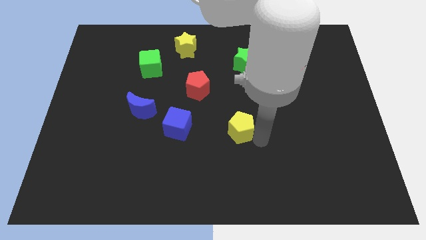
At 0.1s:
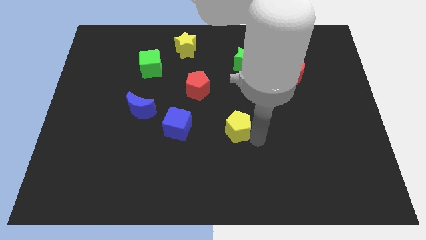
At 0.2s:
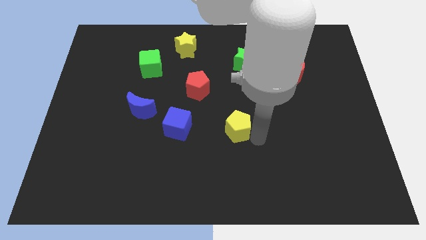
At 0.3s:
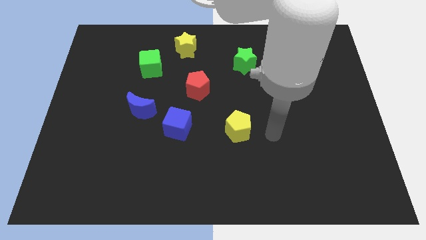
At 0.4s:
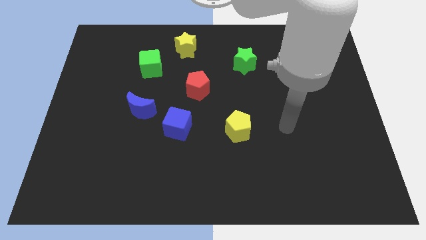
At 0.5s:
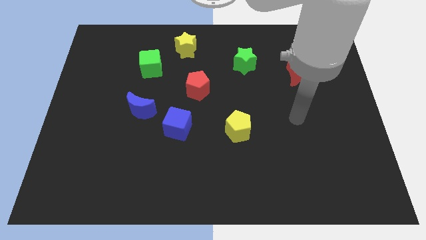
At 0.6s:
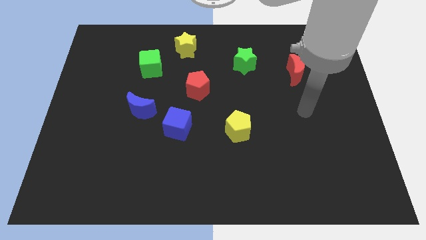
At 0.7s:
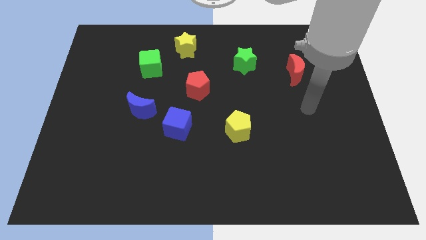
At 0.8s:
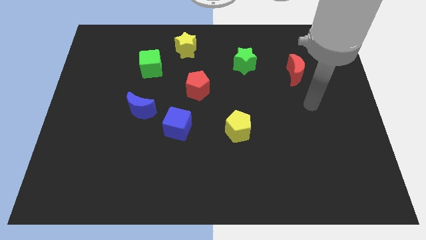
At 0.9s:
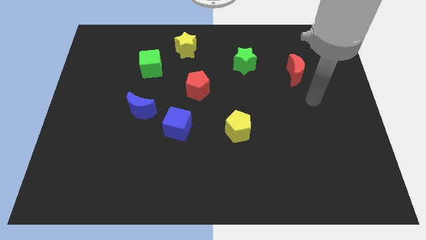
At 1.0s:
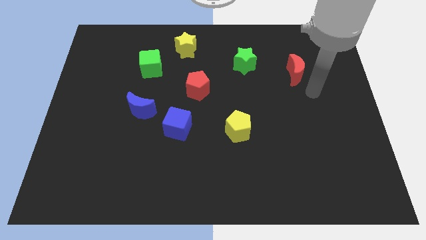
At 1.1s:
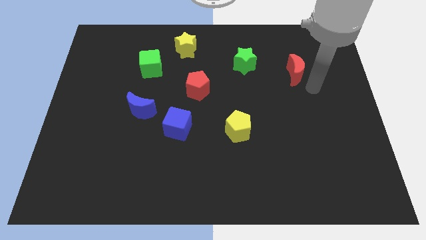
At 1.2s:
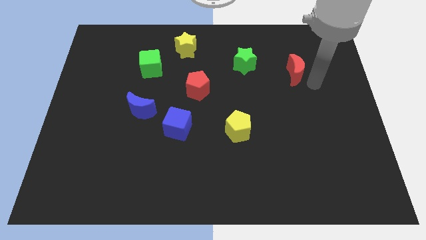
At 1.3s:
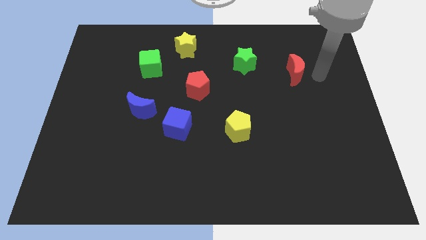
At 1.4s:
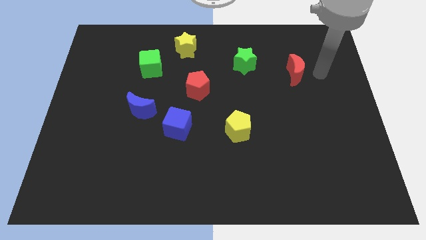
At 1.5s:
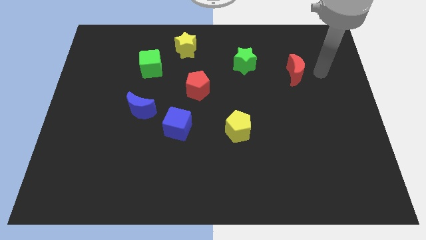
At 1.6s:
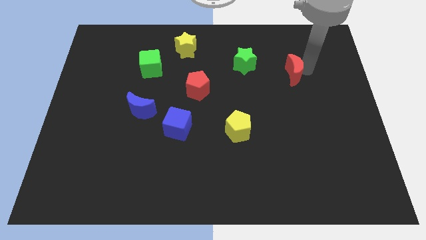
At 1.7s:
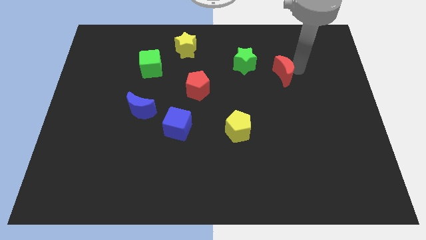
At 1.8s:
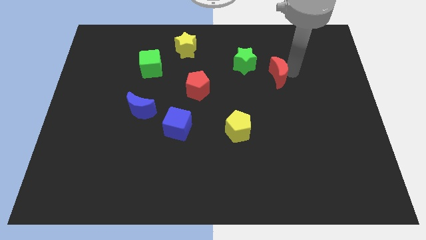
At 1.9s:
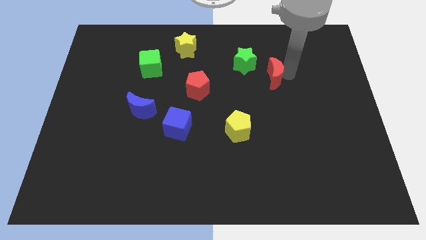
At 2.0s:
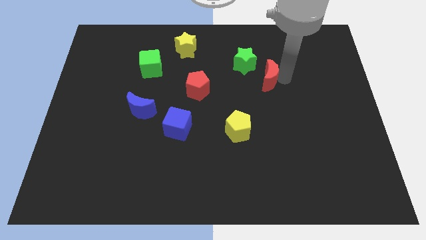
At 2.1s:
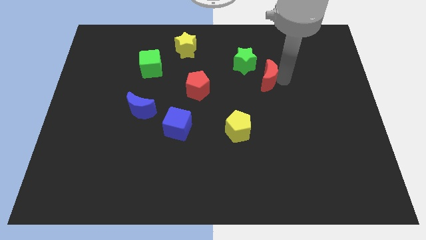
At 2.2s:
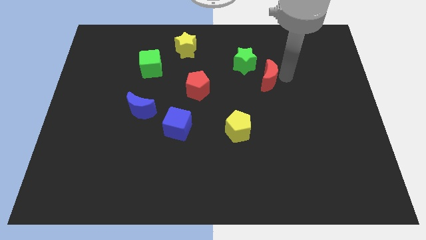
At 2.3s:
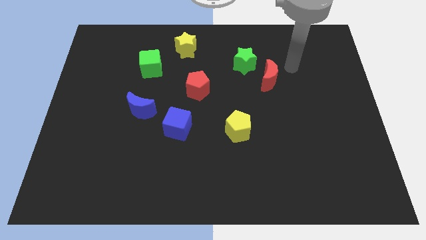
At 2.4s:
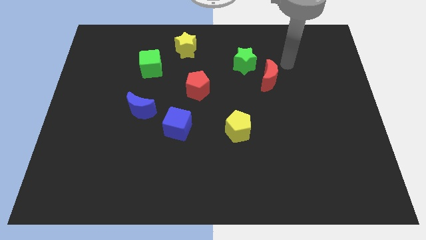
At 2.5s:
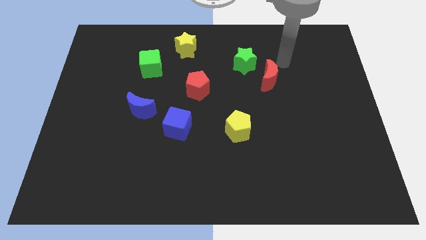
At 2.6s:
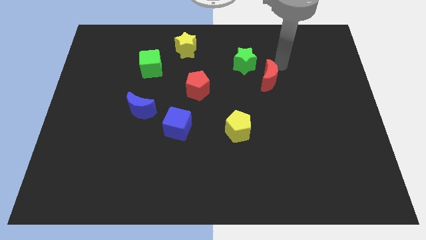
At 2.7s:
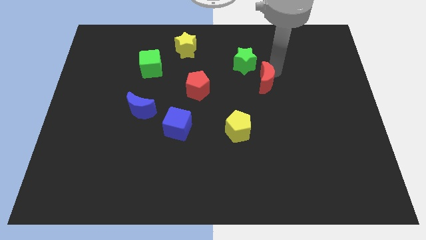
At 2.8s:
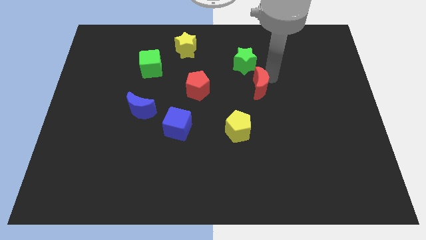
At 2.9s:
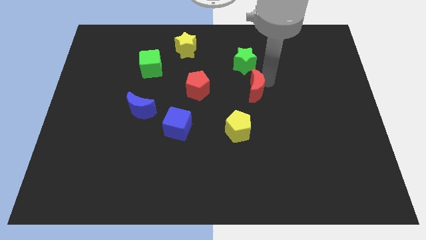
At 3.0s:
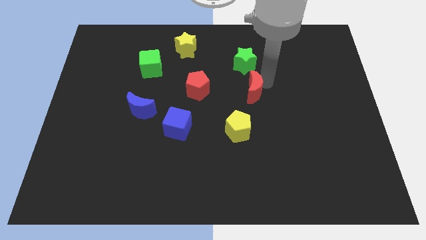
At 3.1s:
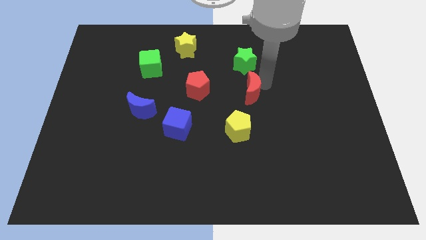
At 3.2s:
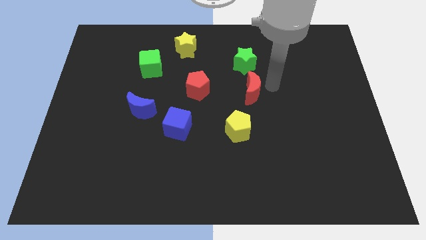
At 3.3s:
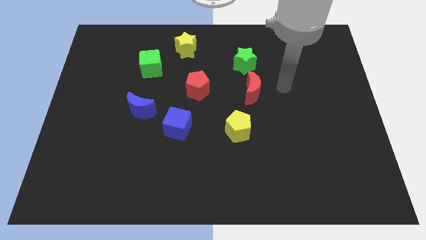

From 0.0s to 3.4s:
push the red crescent to the bottom of the green star

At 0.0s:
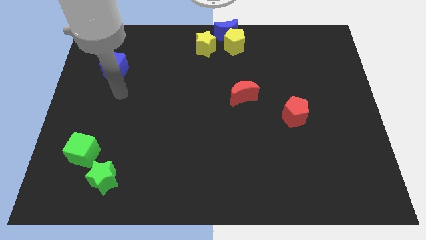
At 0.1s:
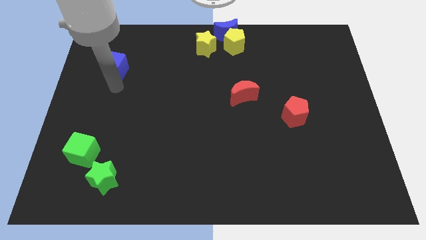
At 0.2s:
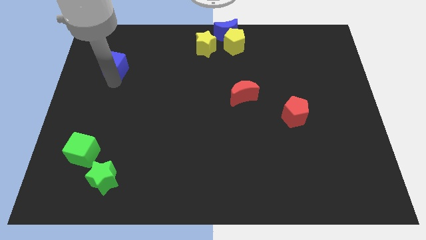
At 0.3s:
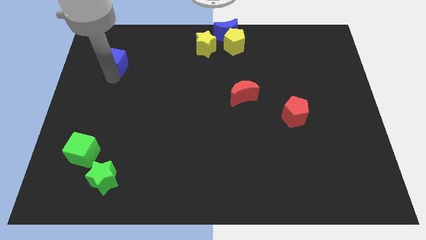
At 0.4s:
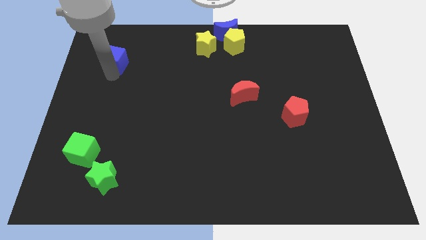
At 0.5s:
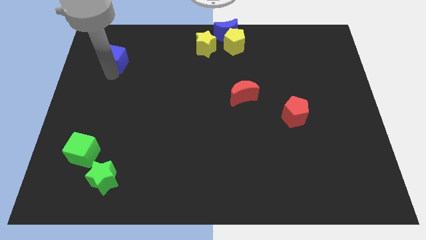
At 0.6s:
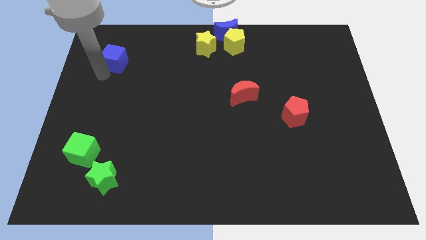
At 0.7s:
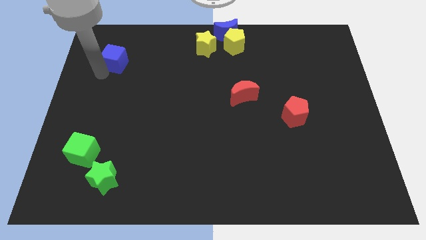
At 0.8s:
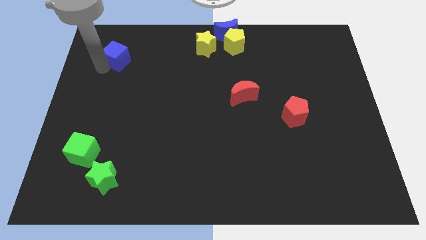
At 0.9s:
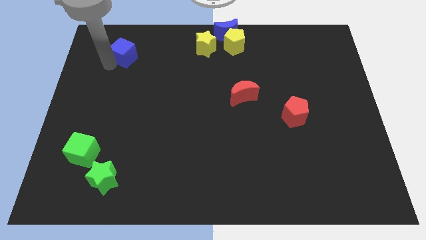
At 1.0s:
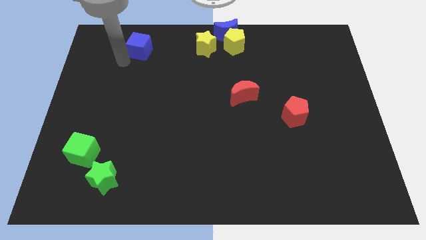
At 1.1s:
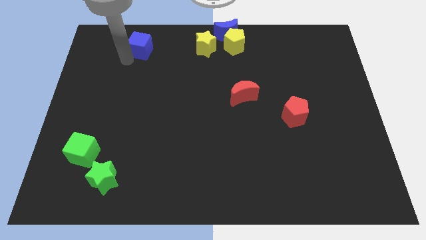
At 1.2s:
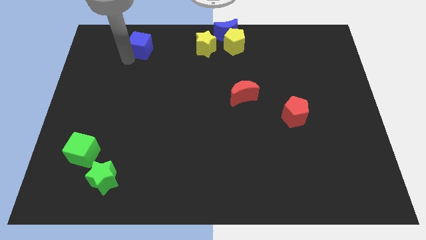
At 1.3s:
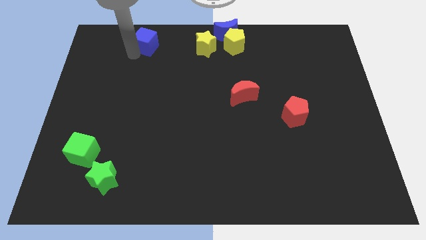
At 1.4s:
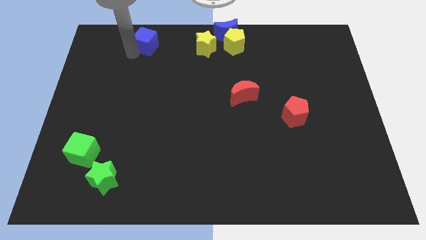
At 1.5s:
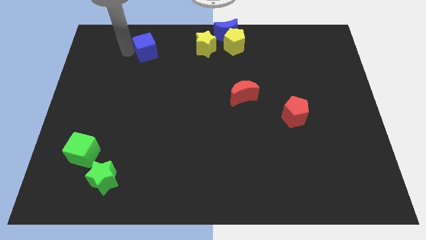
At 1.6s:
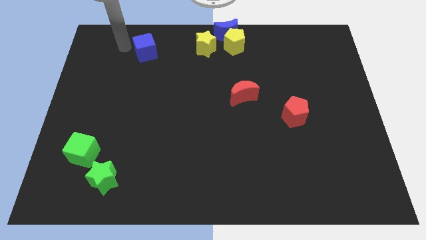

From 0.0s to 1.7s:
place the blue cube parallel to the left of yellow star

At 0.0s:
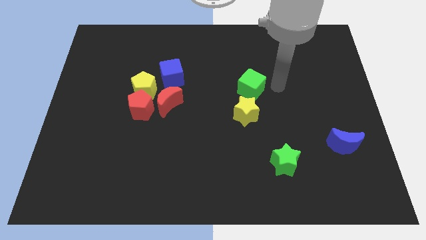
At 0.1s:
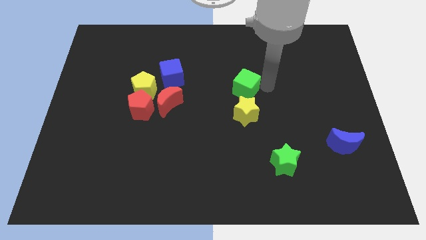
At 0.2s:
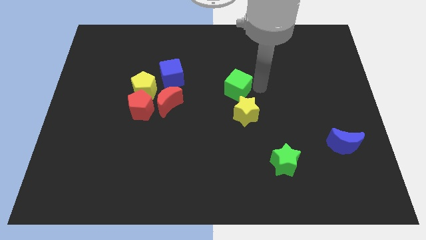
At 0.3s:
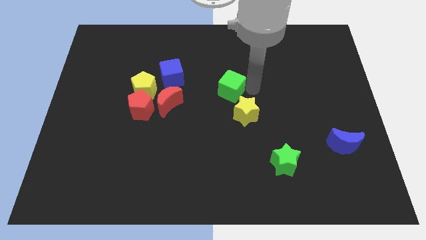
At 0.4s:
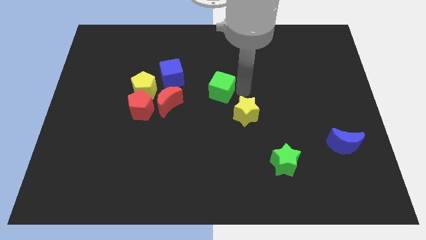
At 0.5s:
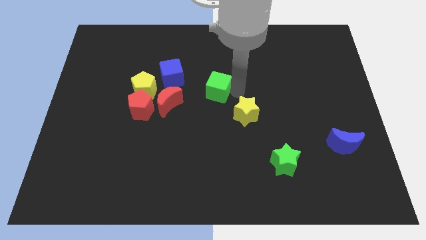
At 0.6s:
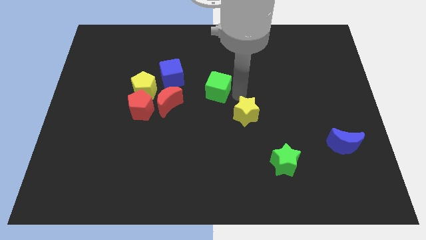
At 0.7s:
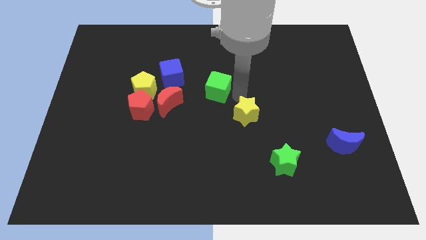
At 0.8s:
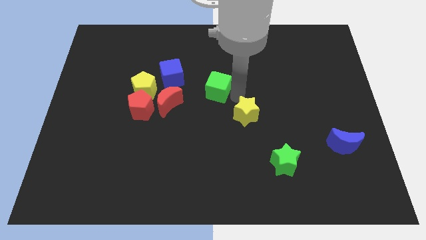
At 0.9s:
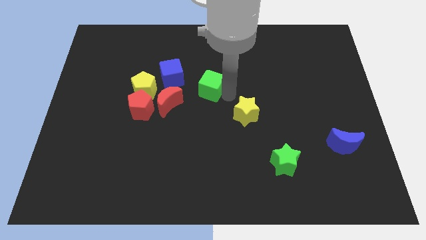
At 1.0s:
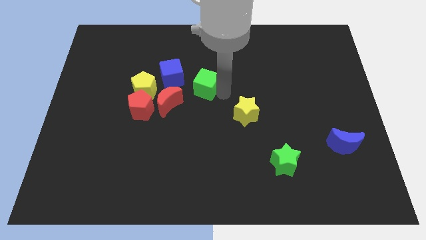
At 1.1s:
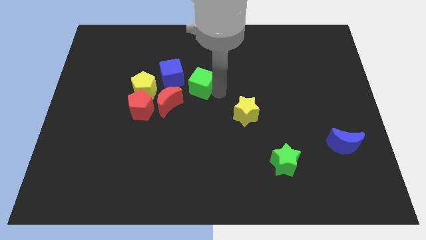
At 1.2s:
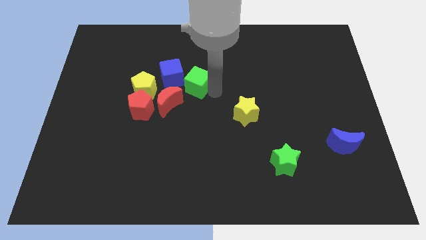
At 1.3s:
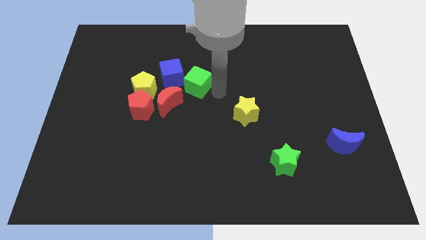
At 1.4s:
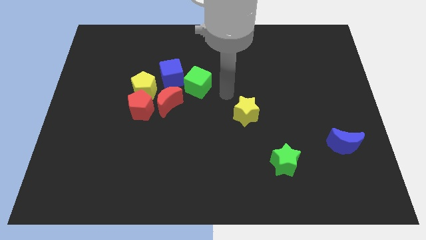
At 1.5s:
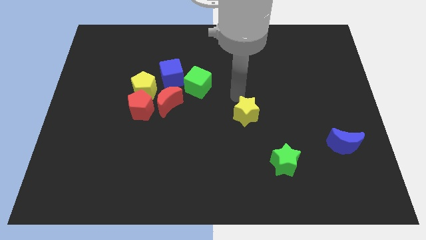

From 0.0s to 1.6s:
push the green cube close to the blue cube

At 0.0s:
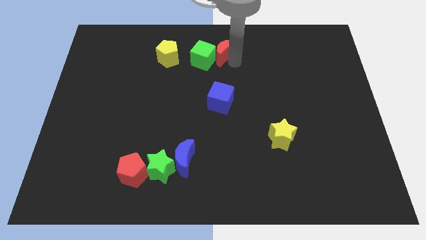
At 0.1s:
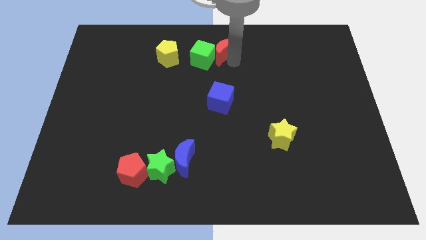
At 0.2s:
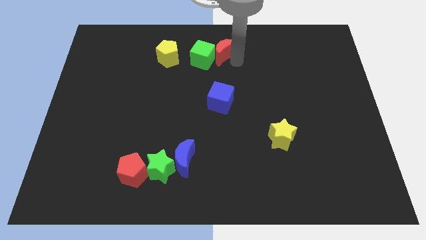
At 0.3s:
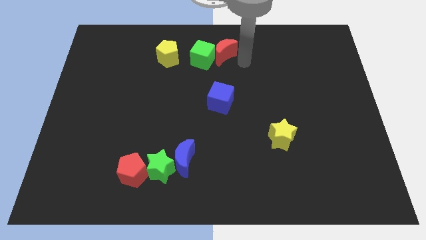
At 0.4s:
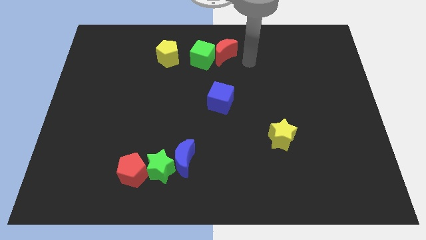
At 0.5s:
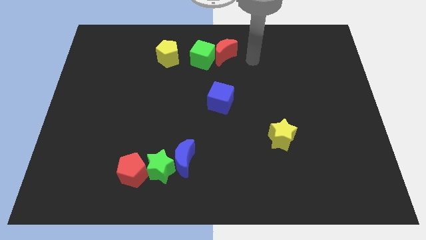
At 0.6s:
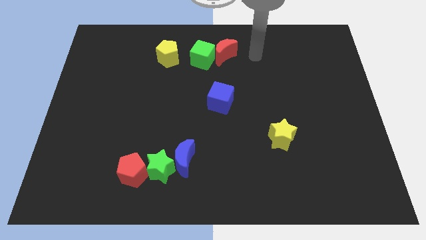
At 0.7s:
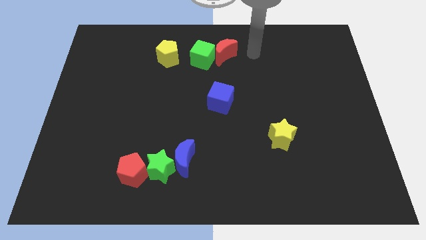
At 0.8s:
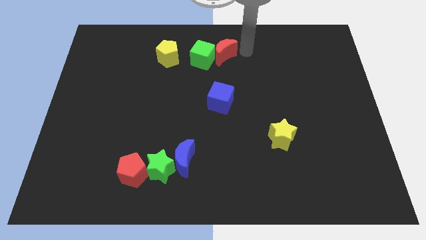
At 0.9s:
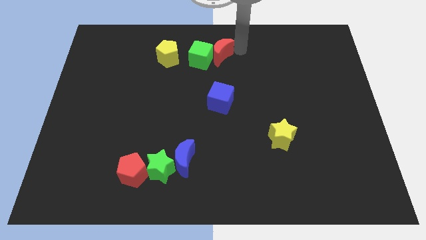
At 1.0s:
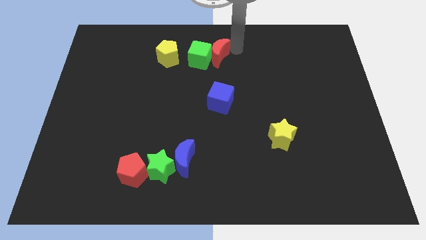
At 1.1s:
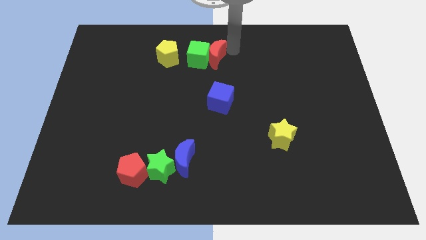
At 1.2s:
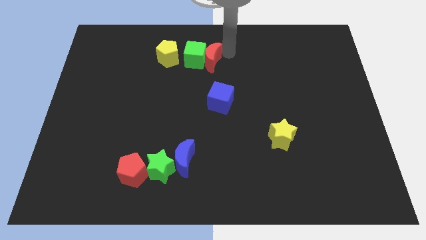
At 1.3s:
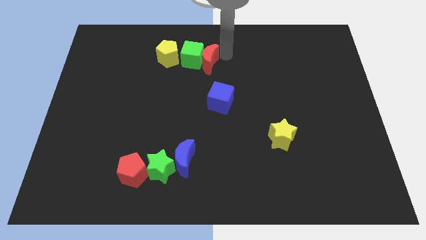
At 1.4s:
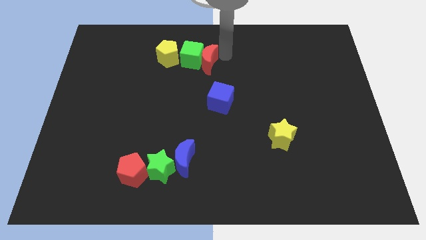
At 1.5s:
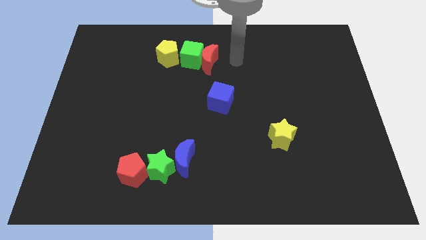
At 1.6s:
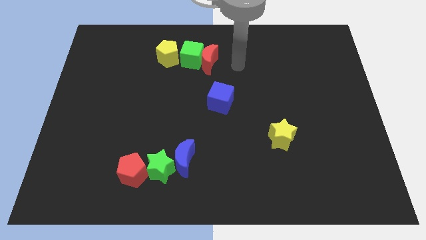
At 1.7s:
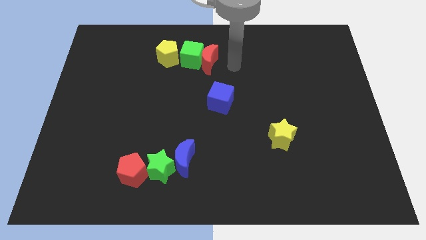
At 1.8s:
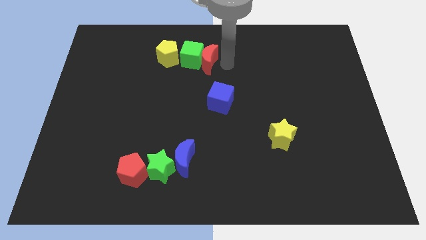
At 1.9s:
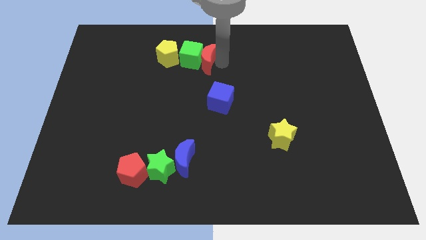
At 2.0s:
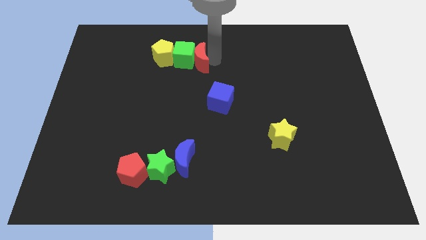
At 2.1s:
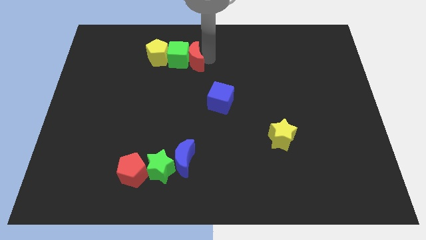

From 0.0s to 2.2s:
push red moon along with other blocks towards left side

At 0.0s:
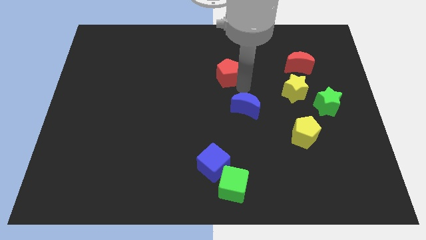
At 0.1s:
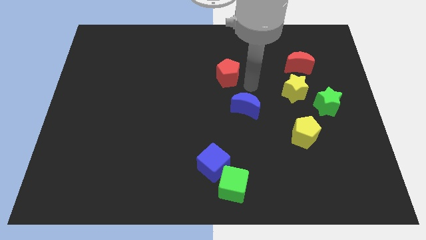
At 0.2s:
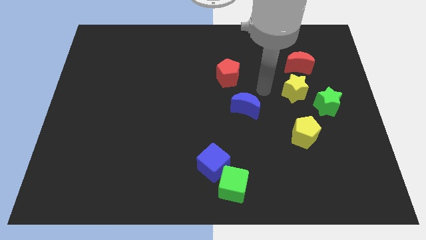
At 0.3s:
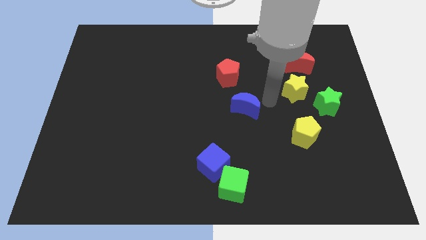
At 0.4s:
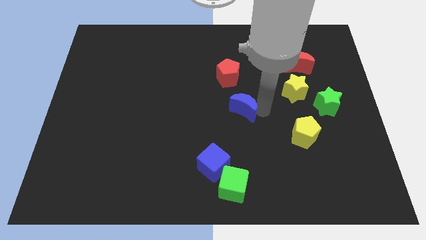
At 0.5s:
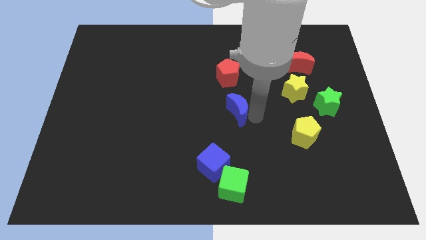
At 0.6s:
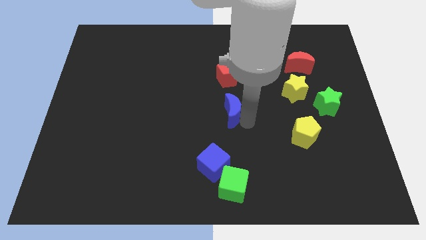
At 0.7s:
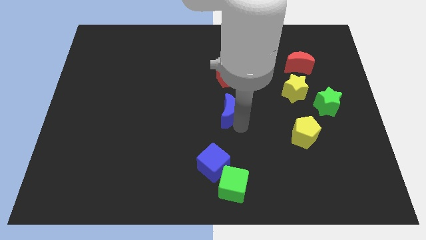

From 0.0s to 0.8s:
place your arm on the right of blue moon
